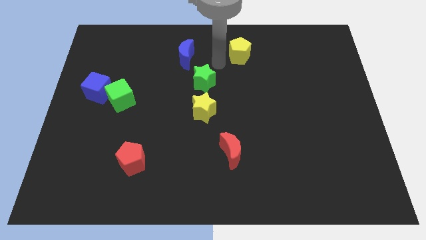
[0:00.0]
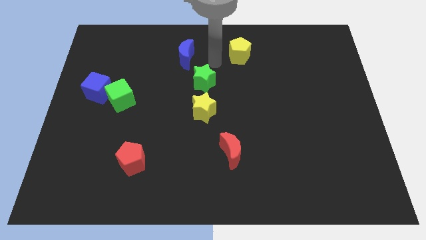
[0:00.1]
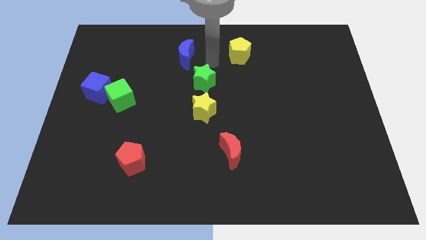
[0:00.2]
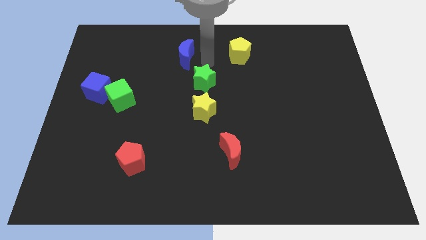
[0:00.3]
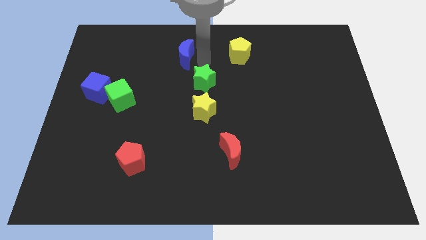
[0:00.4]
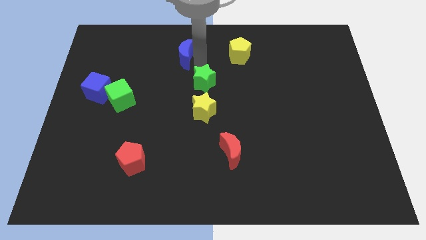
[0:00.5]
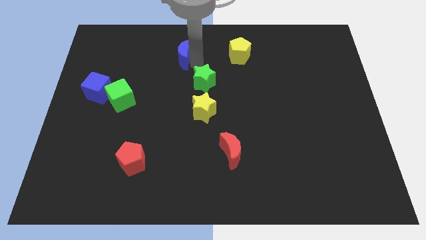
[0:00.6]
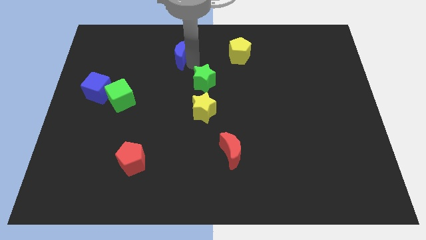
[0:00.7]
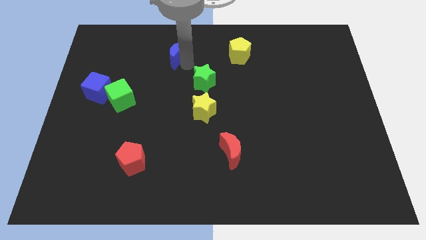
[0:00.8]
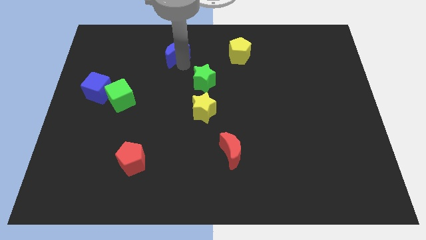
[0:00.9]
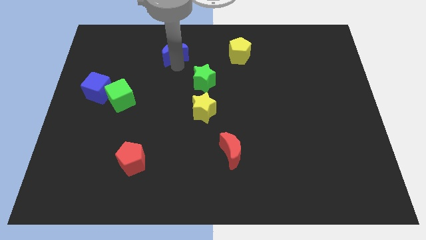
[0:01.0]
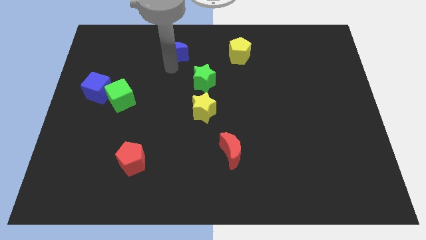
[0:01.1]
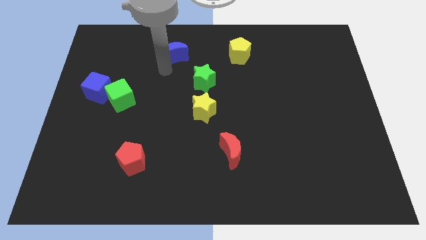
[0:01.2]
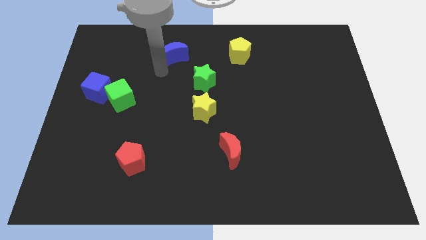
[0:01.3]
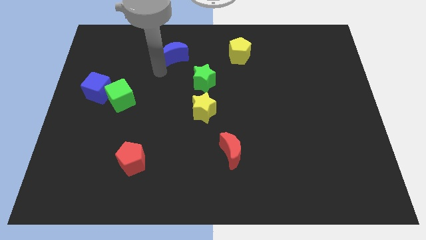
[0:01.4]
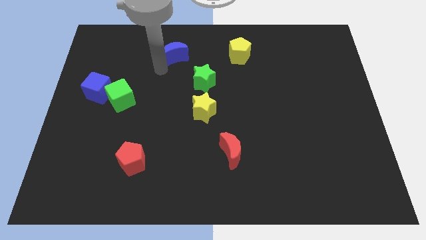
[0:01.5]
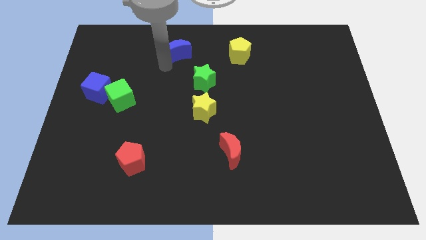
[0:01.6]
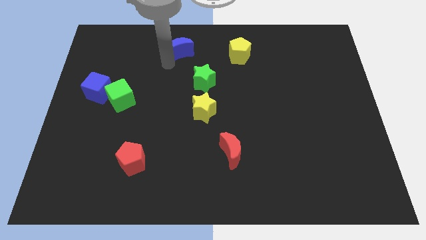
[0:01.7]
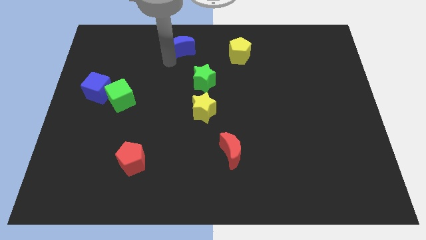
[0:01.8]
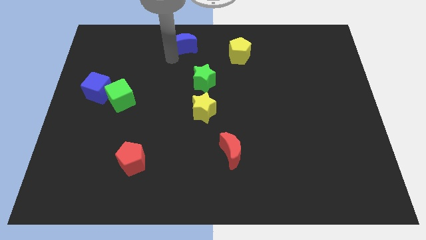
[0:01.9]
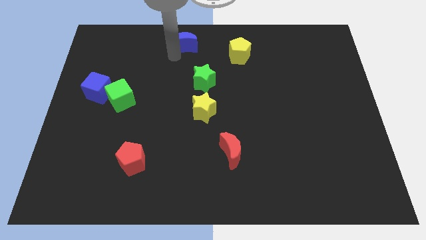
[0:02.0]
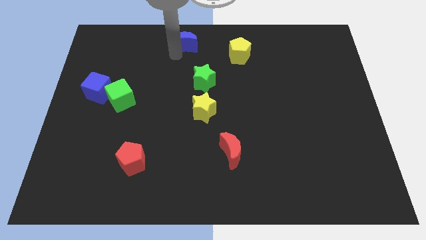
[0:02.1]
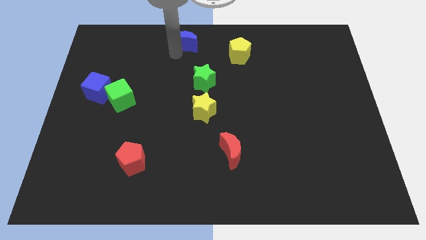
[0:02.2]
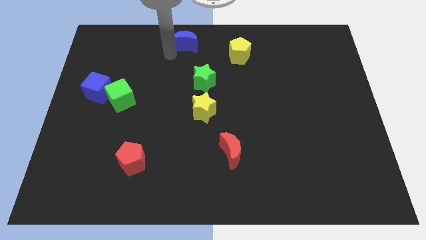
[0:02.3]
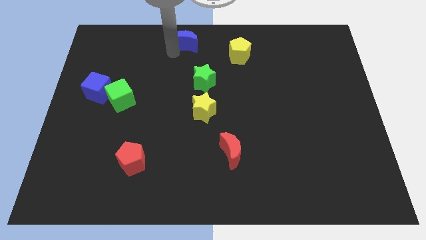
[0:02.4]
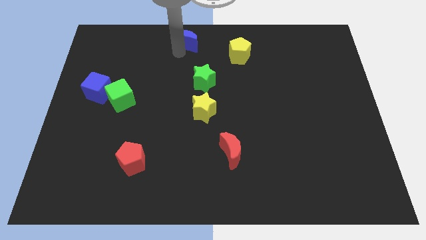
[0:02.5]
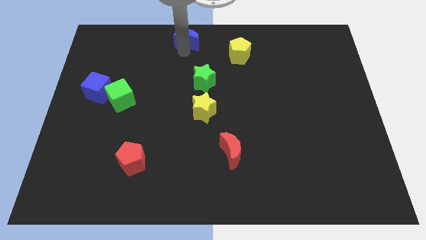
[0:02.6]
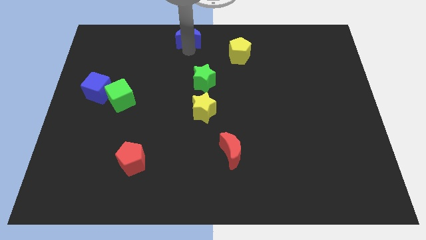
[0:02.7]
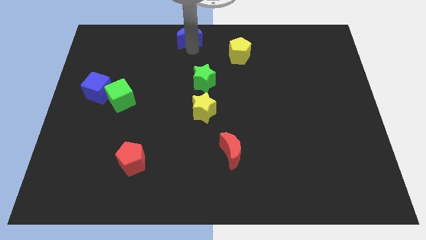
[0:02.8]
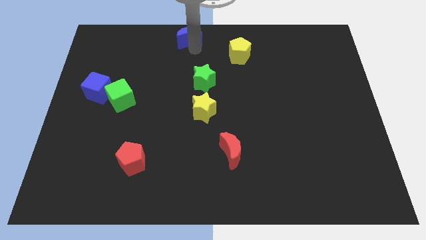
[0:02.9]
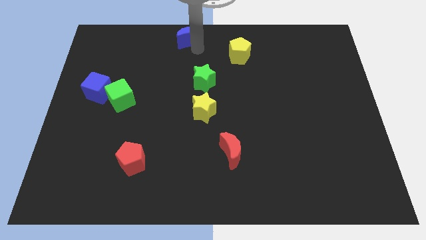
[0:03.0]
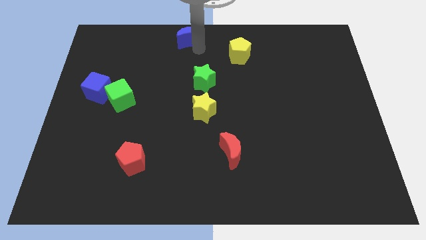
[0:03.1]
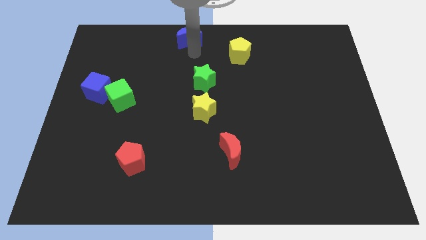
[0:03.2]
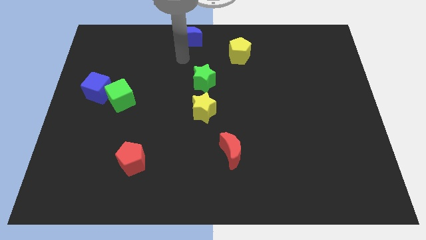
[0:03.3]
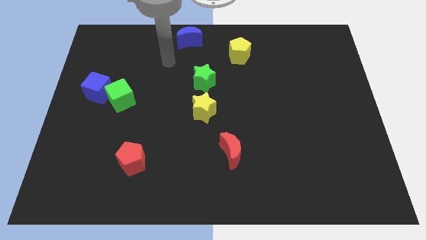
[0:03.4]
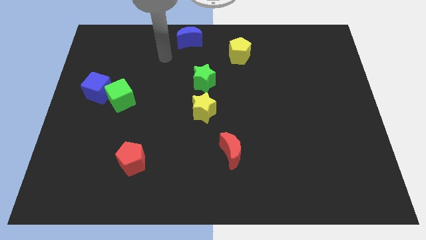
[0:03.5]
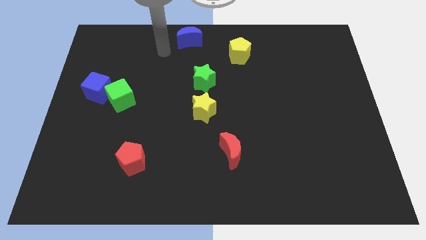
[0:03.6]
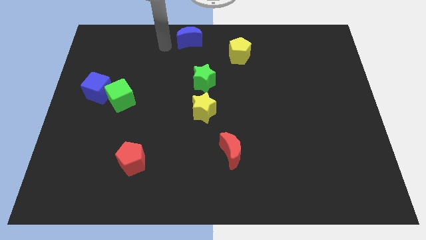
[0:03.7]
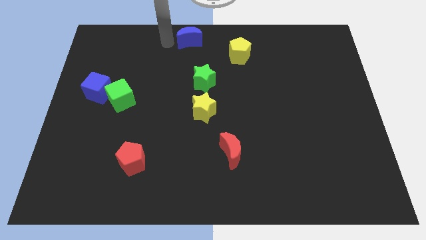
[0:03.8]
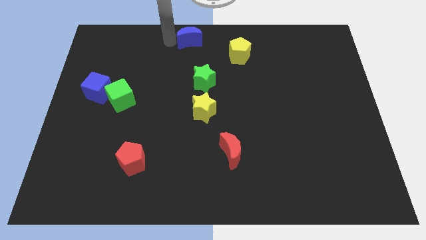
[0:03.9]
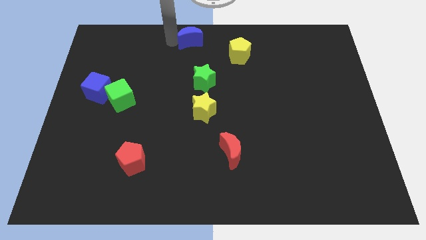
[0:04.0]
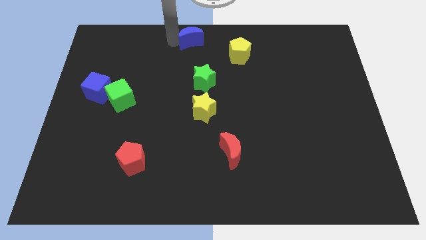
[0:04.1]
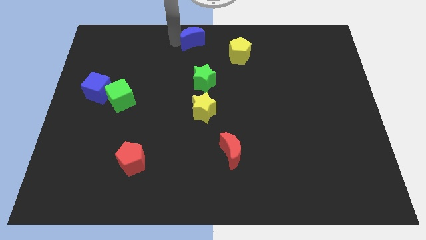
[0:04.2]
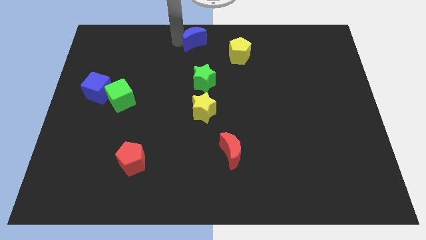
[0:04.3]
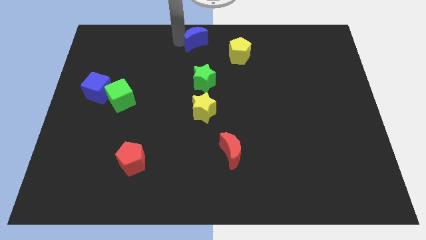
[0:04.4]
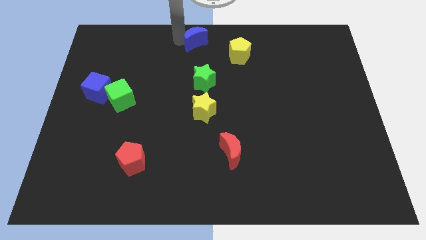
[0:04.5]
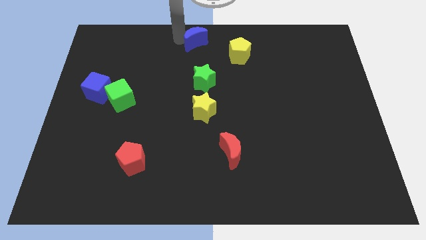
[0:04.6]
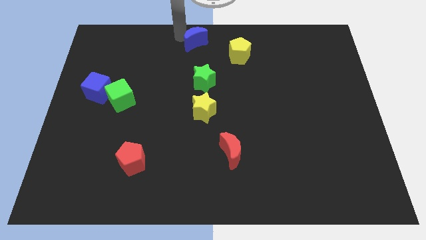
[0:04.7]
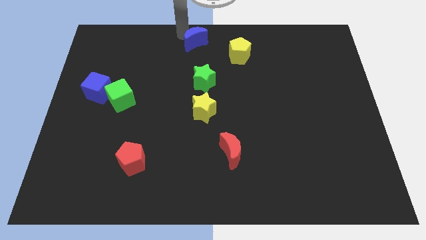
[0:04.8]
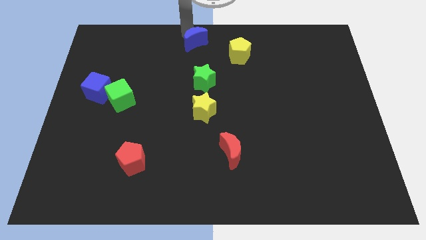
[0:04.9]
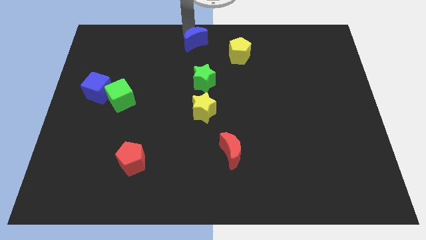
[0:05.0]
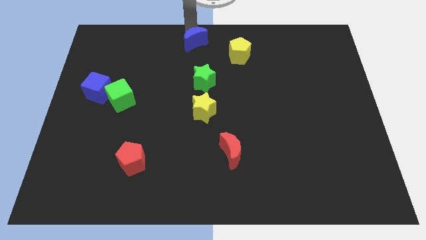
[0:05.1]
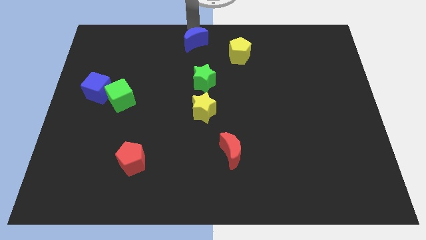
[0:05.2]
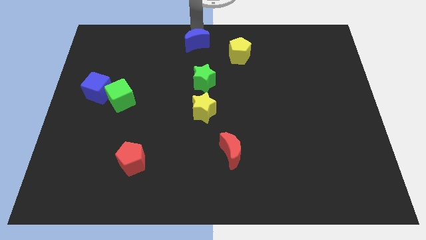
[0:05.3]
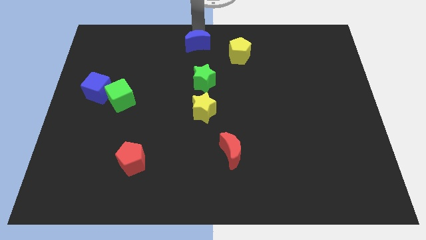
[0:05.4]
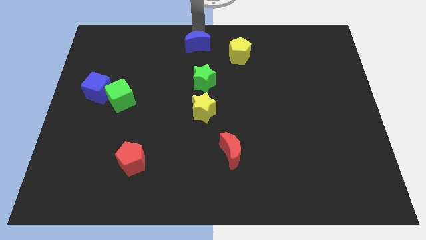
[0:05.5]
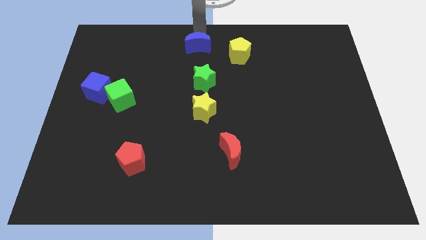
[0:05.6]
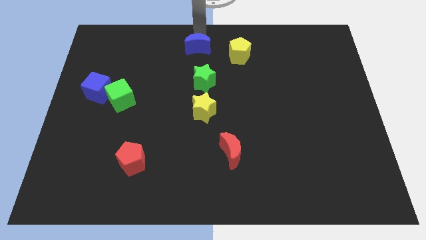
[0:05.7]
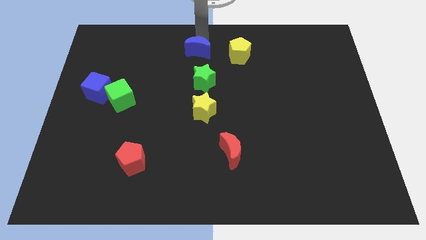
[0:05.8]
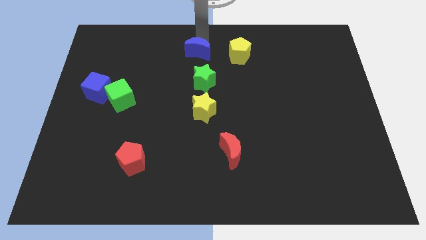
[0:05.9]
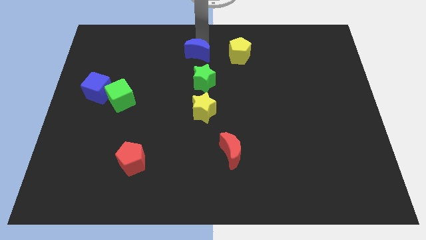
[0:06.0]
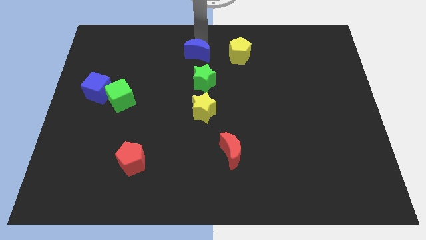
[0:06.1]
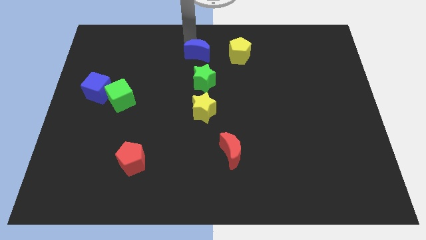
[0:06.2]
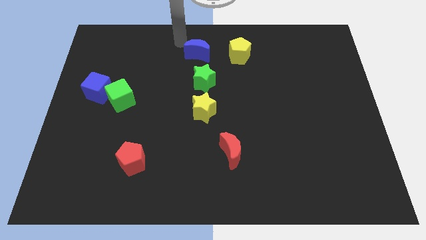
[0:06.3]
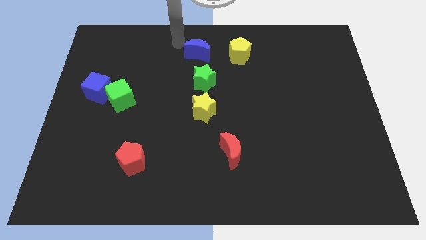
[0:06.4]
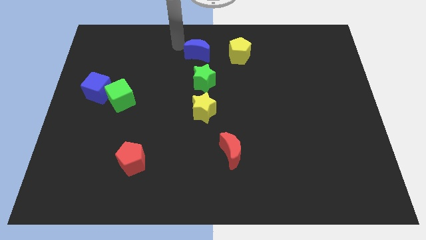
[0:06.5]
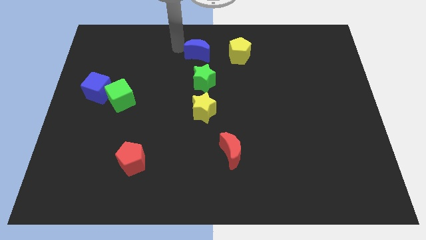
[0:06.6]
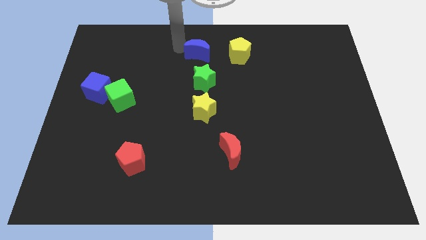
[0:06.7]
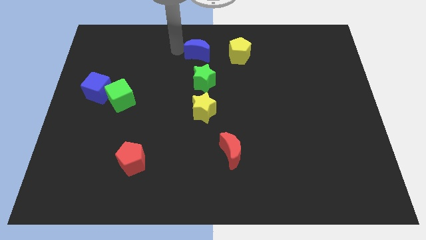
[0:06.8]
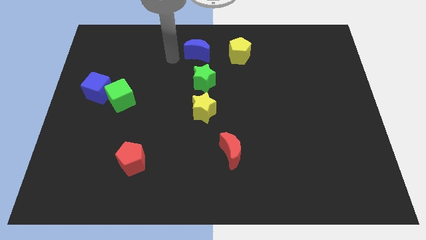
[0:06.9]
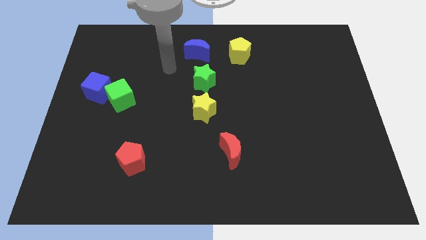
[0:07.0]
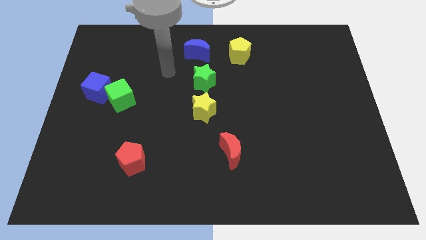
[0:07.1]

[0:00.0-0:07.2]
place the blue crescent to the left of the yellow pentagon

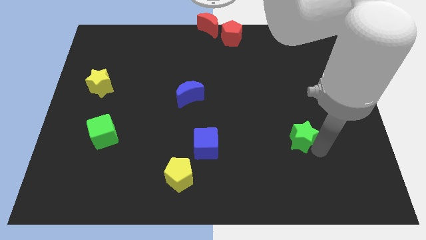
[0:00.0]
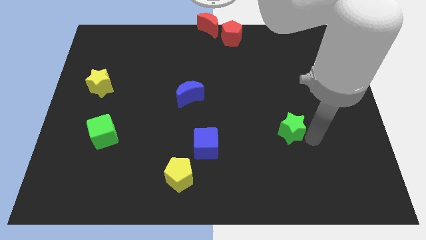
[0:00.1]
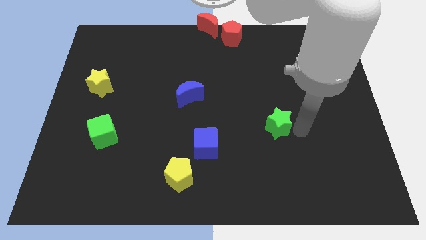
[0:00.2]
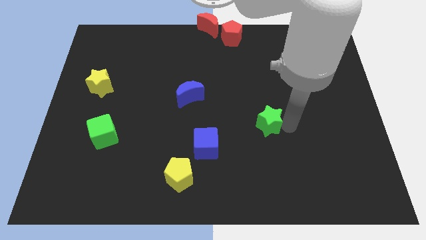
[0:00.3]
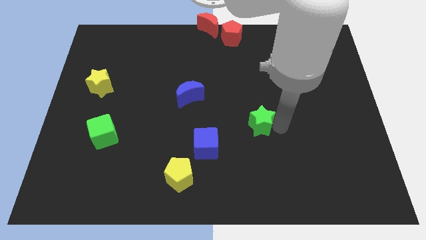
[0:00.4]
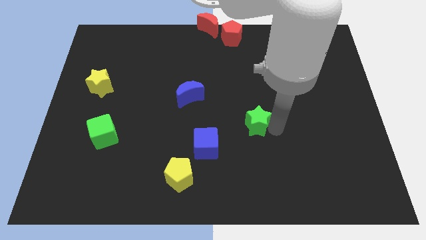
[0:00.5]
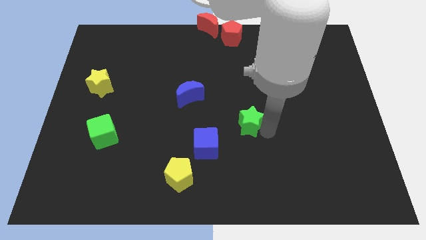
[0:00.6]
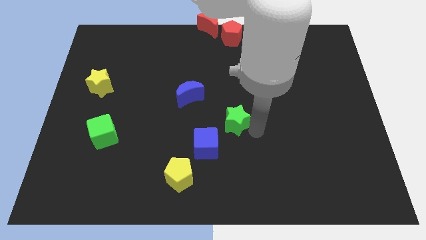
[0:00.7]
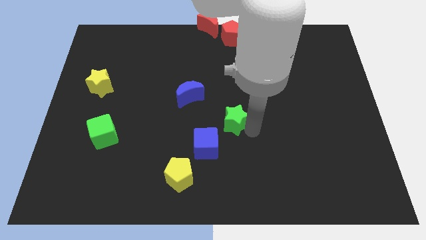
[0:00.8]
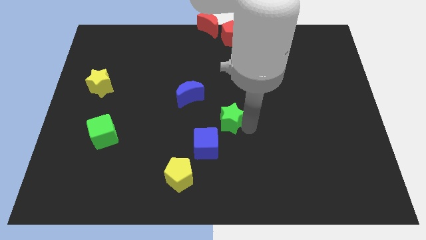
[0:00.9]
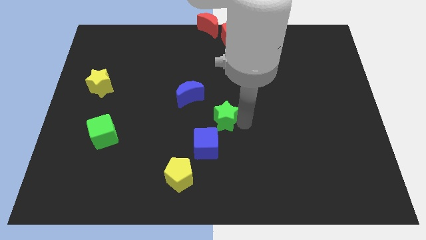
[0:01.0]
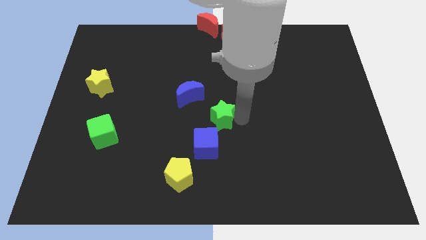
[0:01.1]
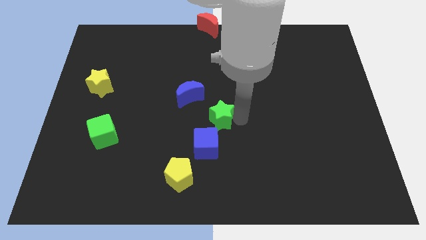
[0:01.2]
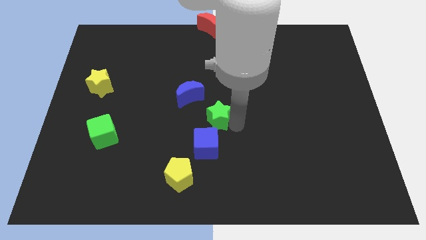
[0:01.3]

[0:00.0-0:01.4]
push the green star towards the top right of the blue cube

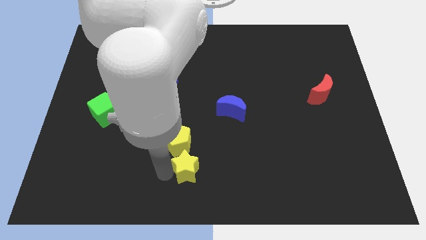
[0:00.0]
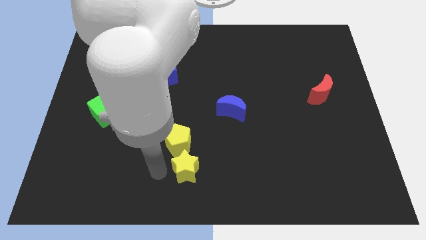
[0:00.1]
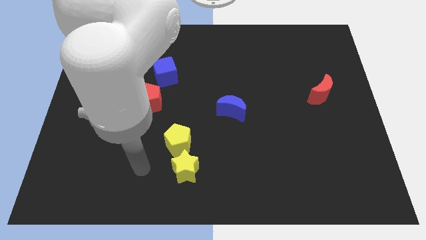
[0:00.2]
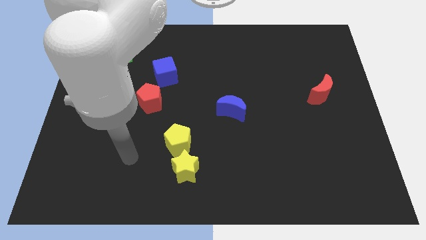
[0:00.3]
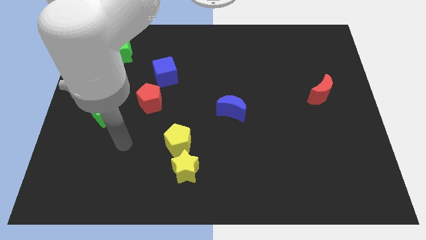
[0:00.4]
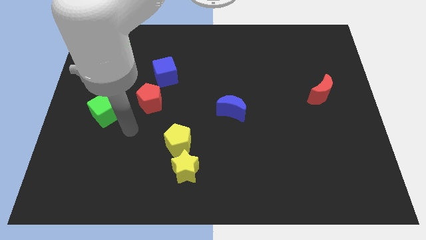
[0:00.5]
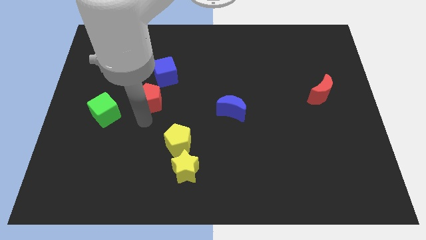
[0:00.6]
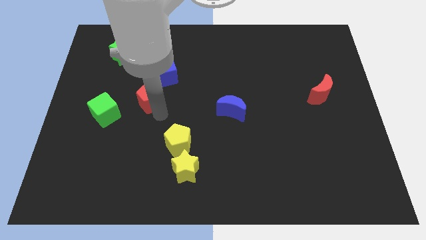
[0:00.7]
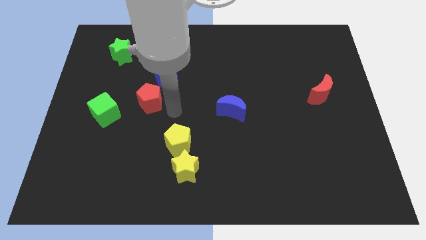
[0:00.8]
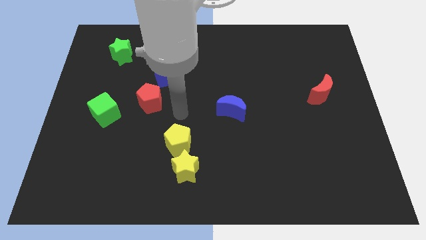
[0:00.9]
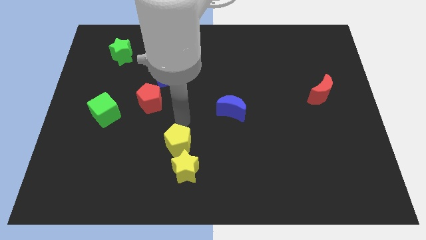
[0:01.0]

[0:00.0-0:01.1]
place your arm to the top of the yellow pentagon
